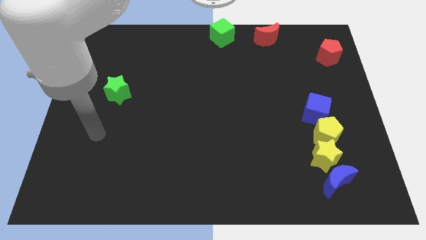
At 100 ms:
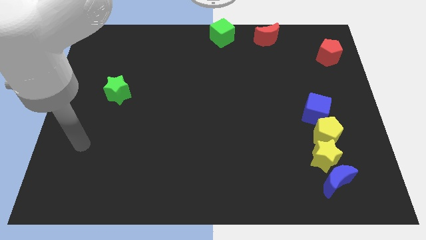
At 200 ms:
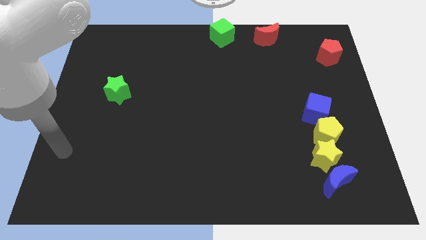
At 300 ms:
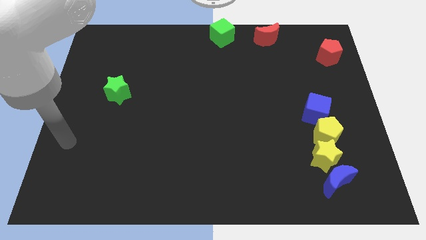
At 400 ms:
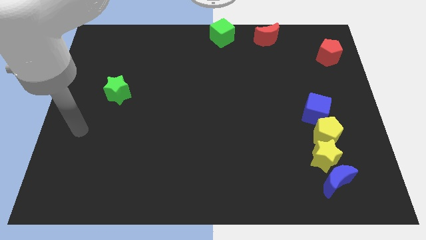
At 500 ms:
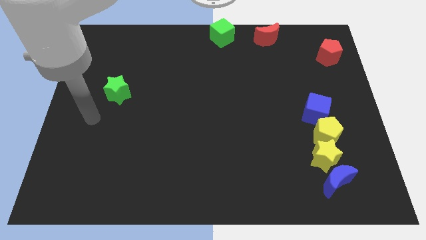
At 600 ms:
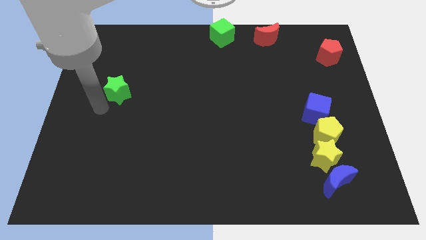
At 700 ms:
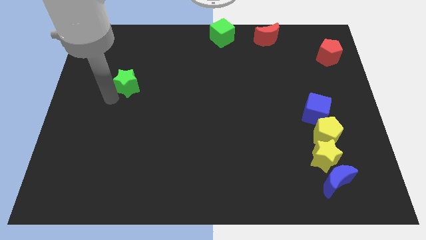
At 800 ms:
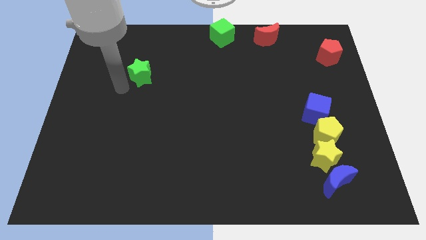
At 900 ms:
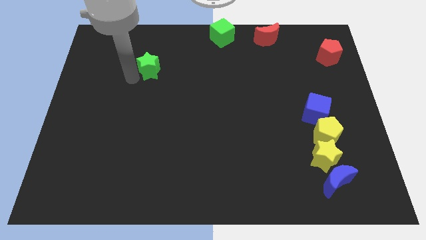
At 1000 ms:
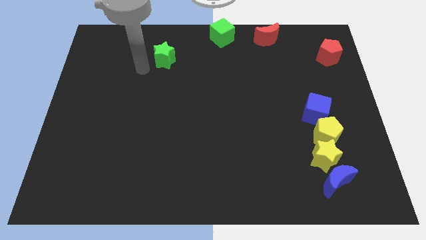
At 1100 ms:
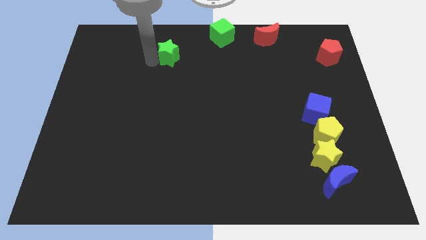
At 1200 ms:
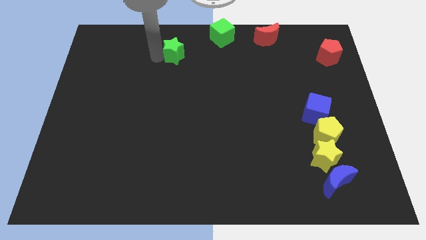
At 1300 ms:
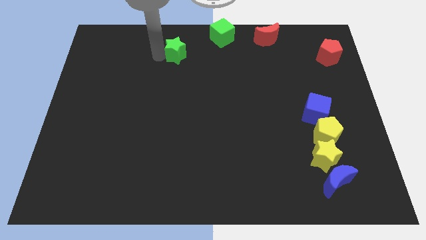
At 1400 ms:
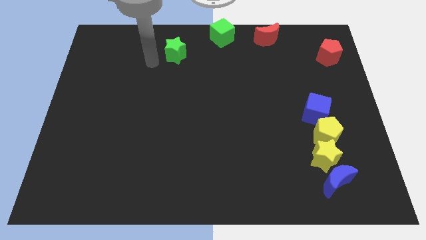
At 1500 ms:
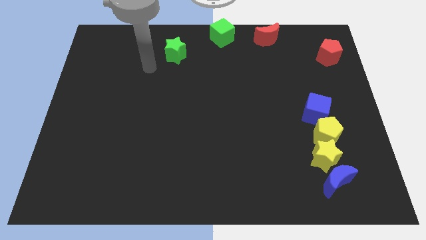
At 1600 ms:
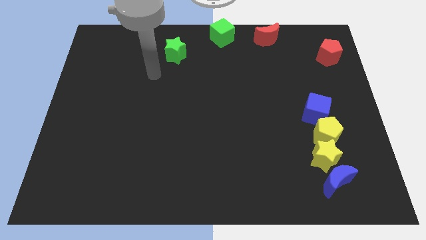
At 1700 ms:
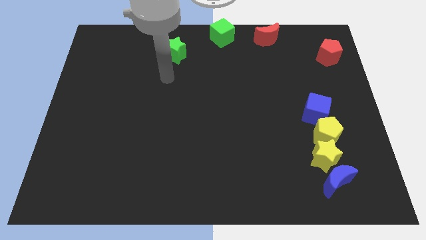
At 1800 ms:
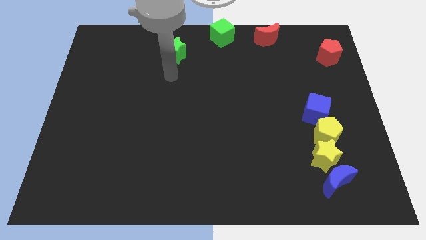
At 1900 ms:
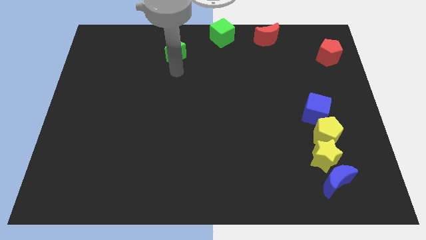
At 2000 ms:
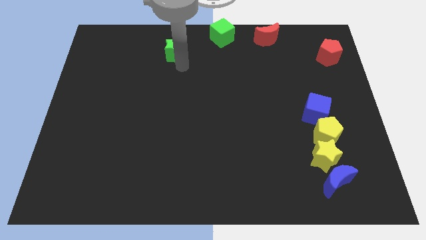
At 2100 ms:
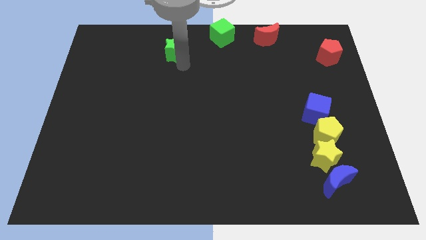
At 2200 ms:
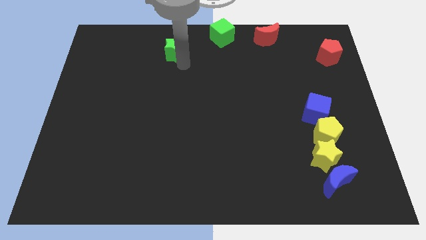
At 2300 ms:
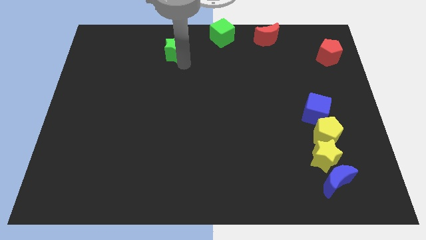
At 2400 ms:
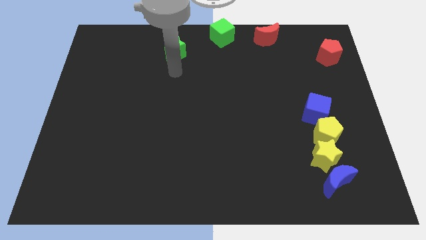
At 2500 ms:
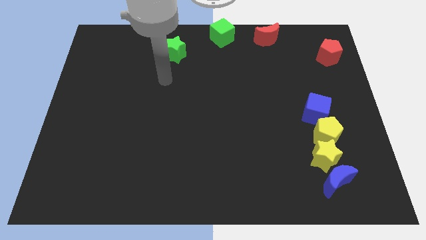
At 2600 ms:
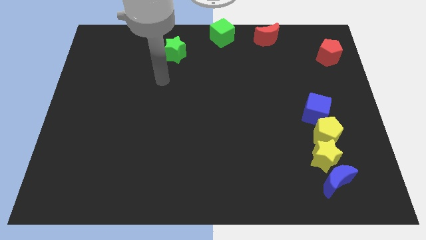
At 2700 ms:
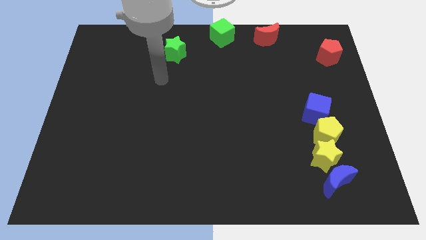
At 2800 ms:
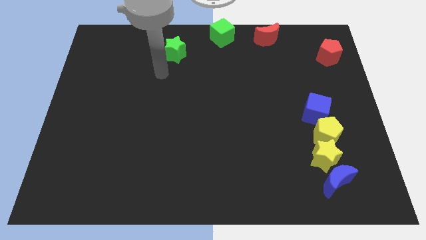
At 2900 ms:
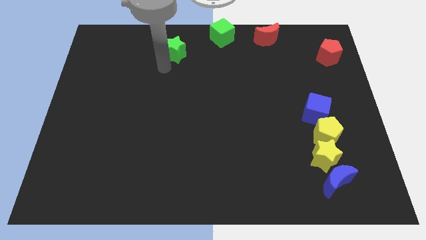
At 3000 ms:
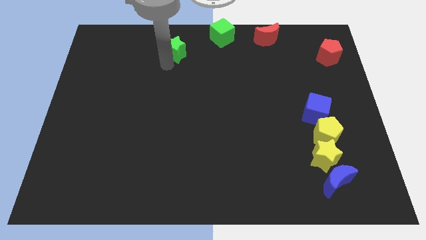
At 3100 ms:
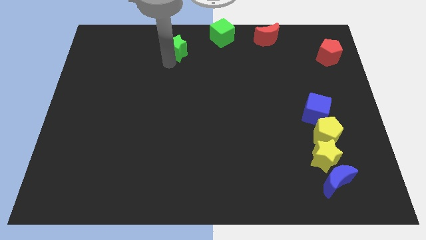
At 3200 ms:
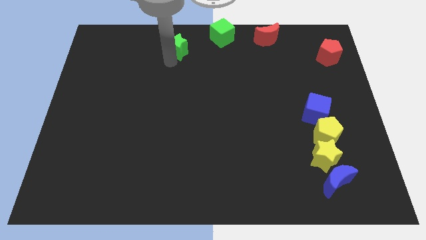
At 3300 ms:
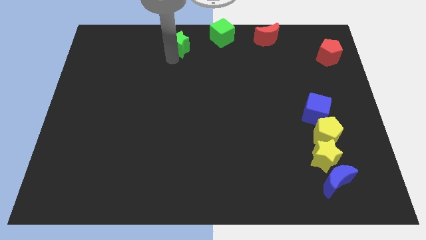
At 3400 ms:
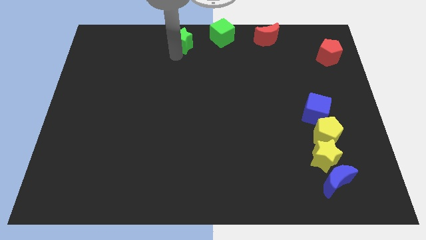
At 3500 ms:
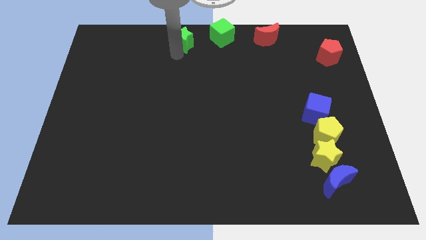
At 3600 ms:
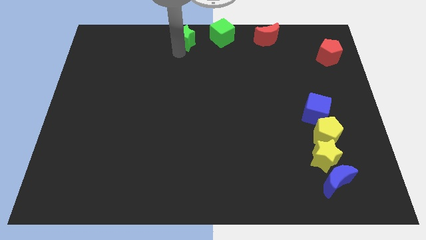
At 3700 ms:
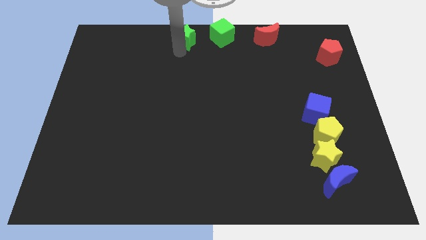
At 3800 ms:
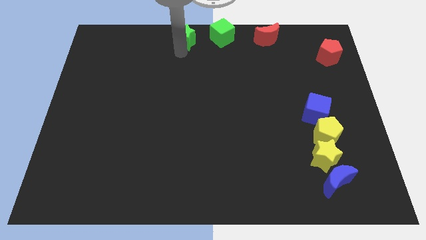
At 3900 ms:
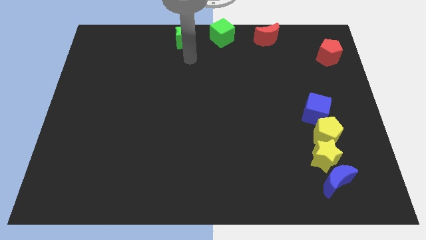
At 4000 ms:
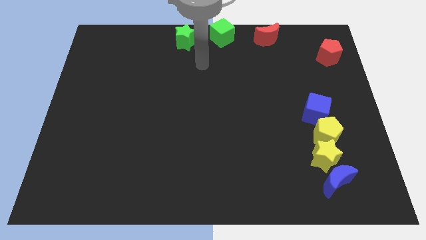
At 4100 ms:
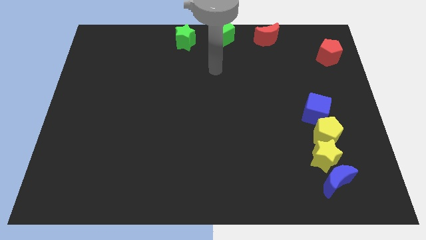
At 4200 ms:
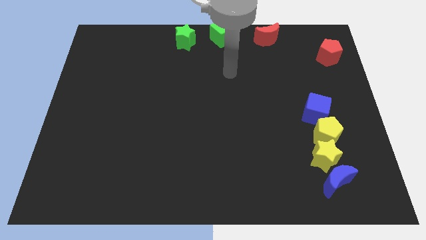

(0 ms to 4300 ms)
move the green star to the left of the green cube

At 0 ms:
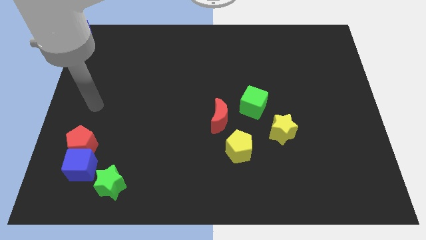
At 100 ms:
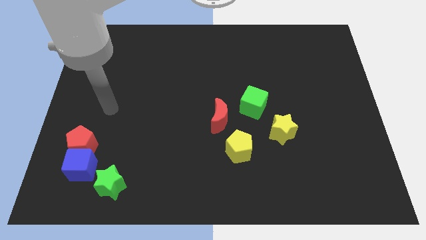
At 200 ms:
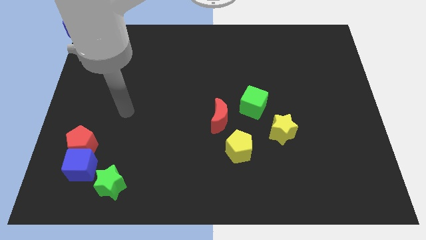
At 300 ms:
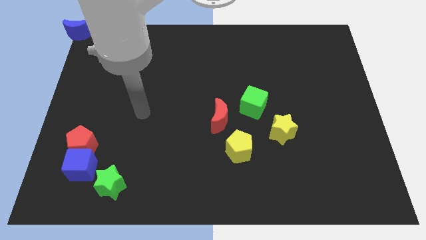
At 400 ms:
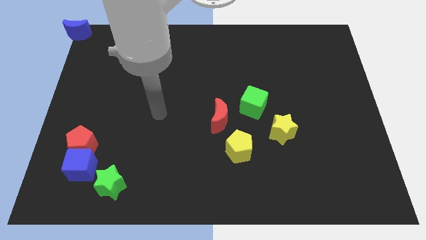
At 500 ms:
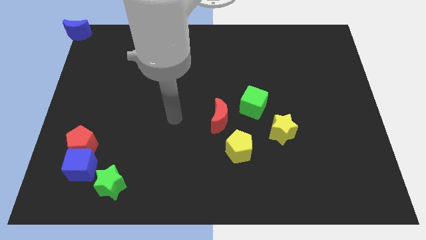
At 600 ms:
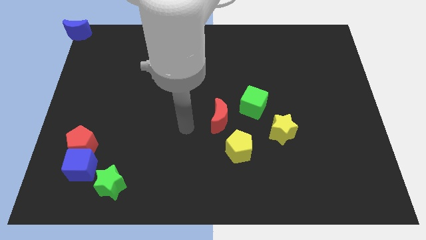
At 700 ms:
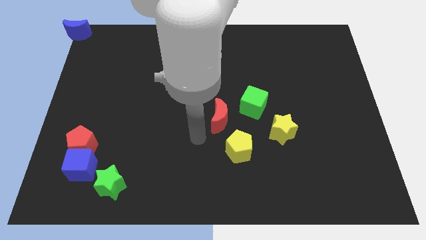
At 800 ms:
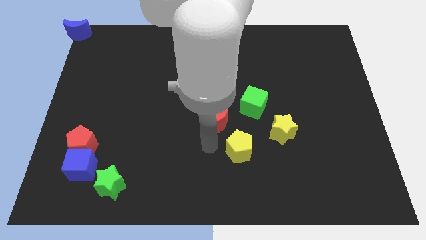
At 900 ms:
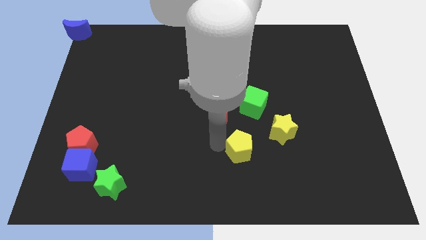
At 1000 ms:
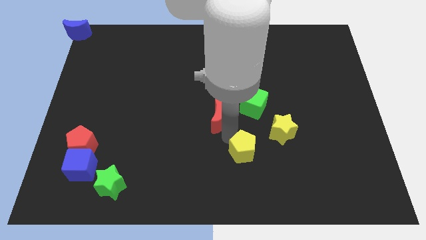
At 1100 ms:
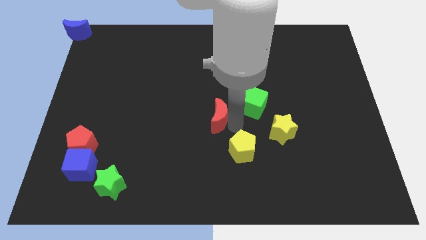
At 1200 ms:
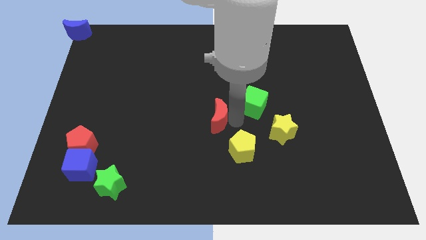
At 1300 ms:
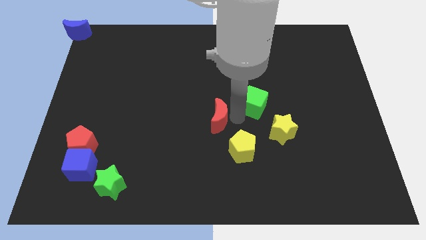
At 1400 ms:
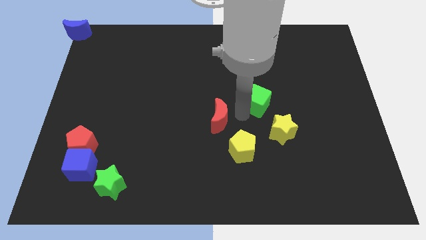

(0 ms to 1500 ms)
slightly push the yellow pentagon towards the bottom center of the board

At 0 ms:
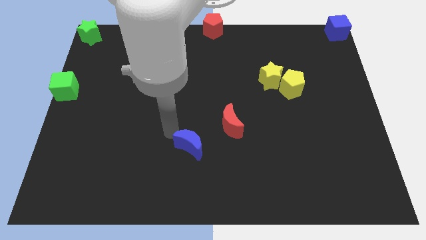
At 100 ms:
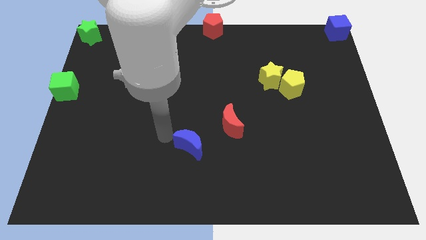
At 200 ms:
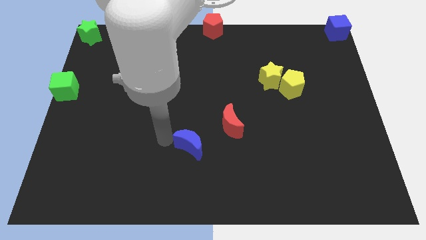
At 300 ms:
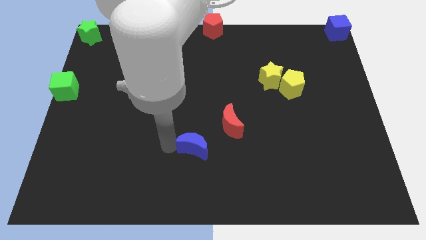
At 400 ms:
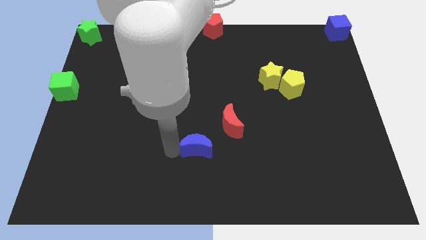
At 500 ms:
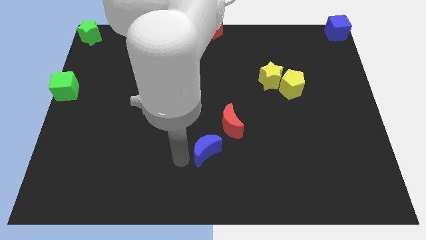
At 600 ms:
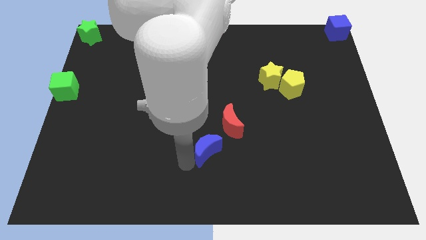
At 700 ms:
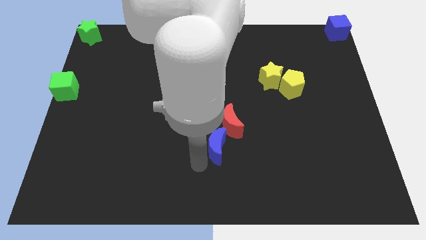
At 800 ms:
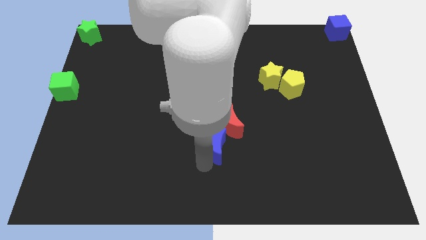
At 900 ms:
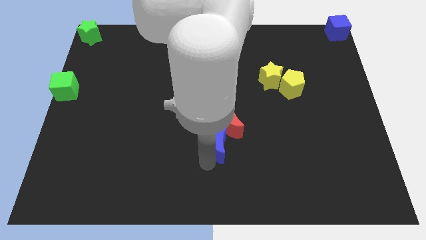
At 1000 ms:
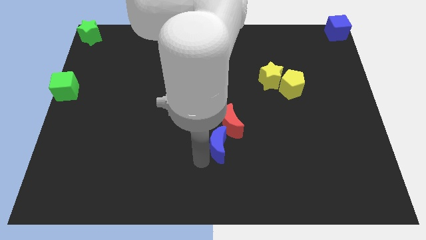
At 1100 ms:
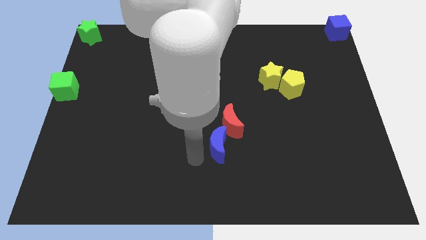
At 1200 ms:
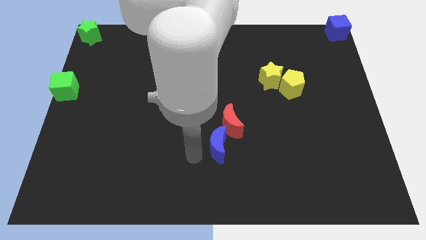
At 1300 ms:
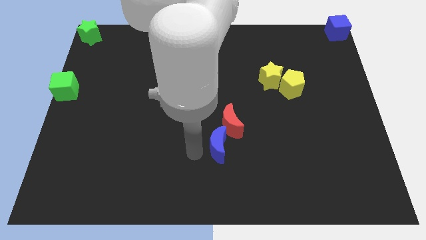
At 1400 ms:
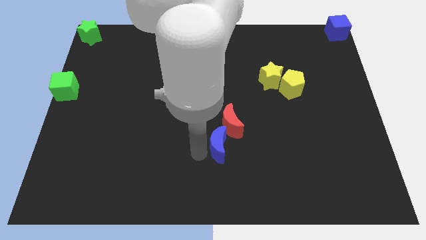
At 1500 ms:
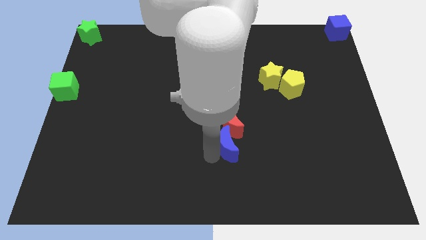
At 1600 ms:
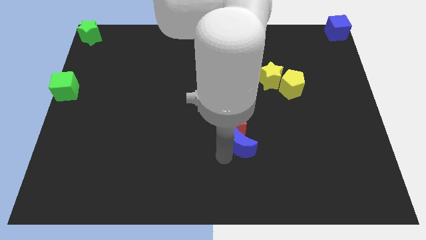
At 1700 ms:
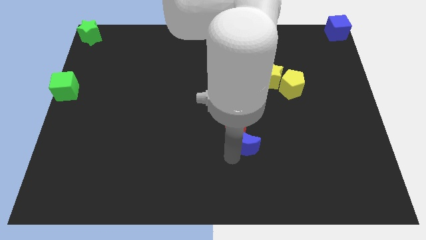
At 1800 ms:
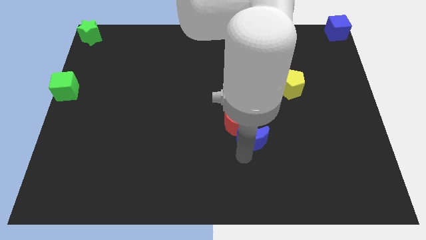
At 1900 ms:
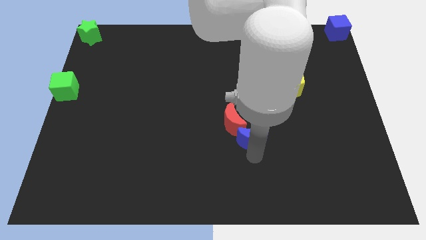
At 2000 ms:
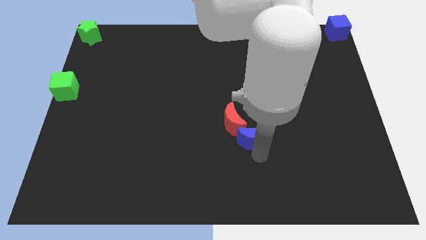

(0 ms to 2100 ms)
push the blue crescent into the red crescent

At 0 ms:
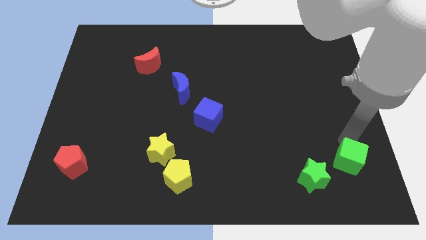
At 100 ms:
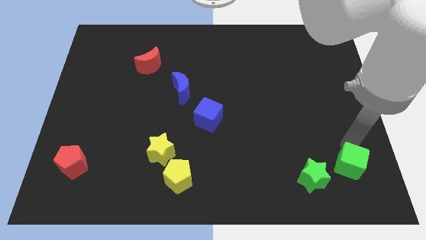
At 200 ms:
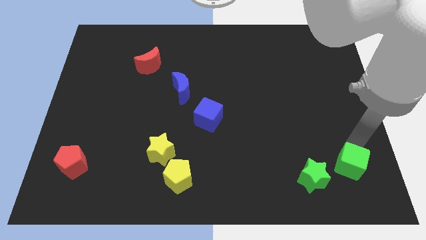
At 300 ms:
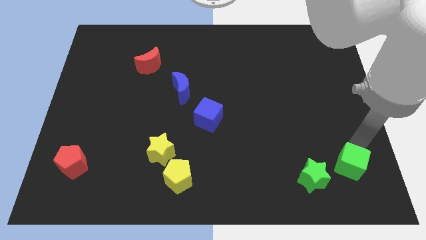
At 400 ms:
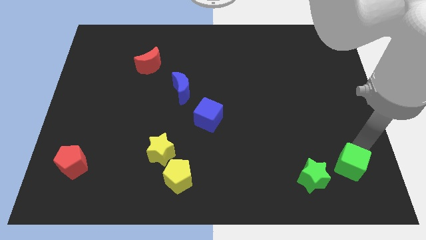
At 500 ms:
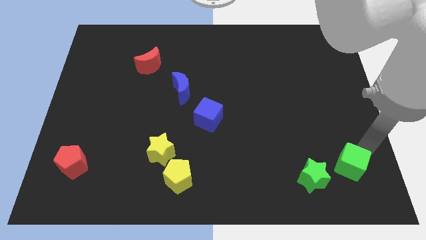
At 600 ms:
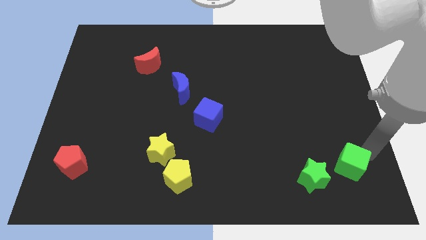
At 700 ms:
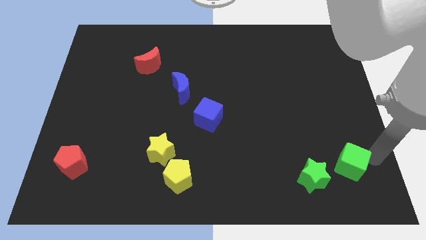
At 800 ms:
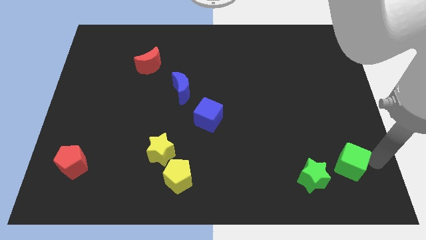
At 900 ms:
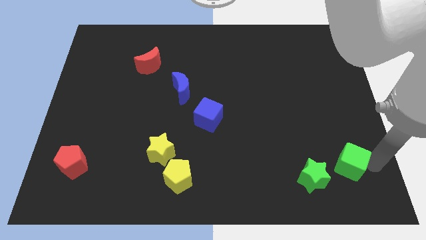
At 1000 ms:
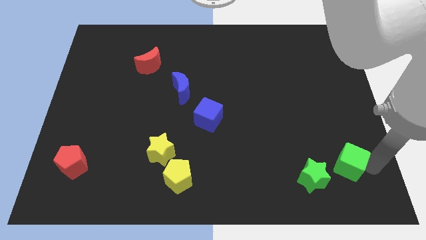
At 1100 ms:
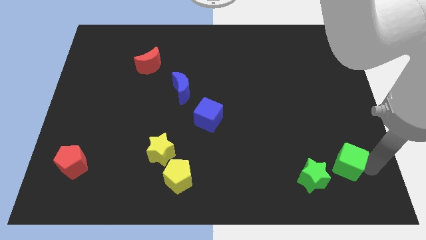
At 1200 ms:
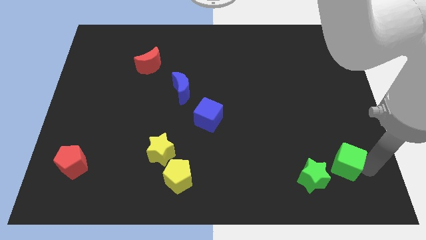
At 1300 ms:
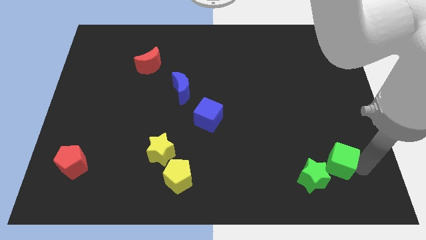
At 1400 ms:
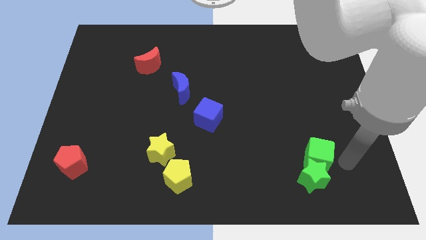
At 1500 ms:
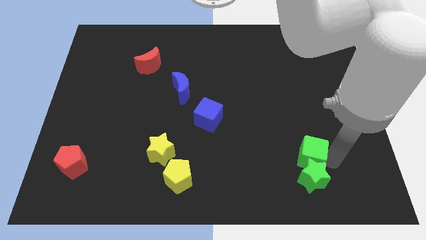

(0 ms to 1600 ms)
move the green cube to the top side of the green star
